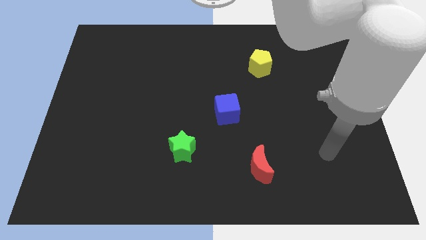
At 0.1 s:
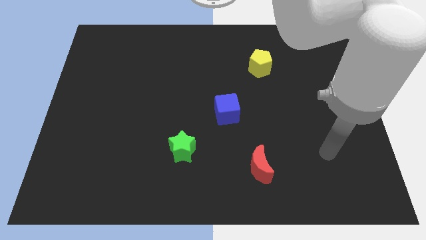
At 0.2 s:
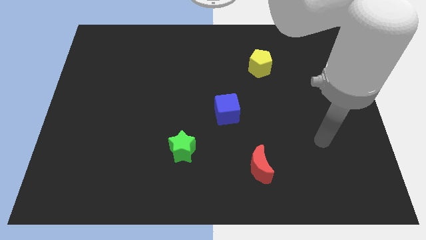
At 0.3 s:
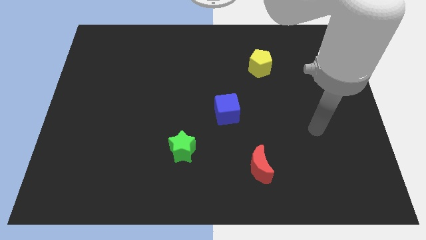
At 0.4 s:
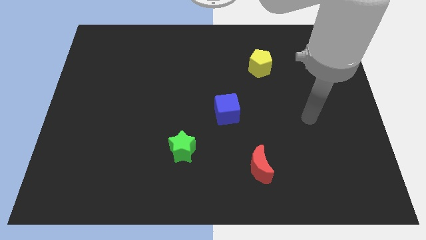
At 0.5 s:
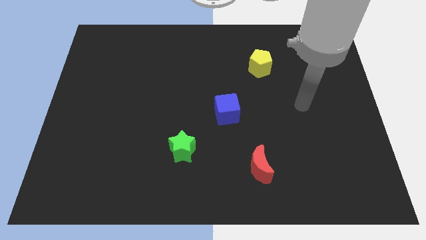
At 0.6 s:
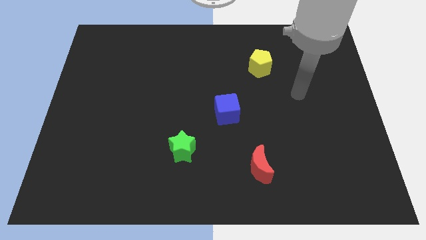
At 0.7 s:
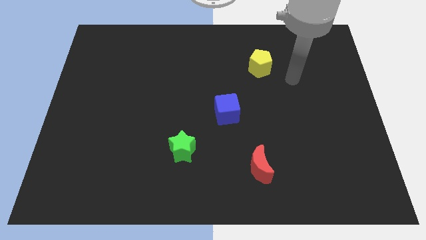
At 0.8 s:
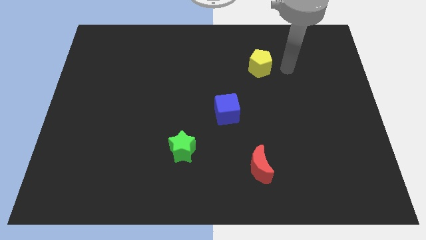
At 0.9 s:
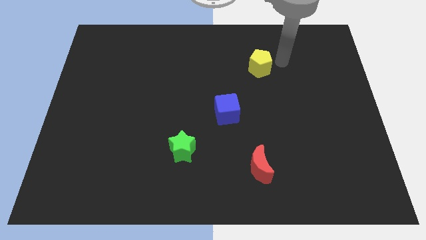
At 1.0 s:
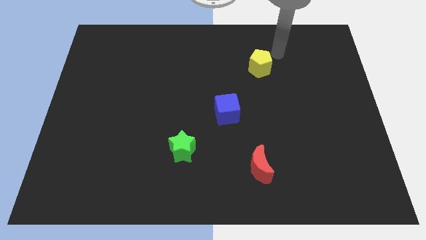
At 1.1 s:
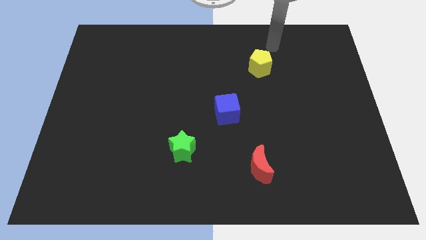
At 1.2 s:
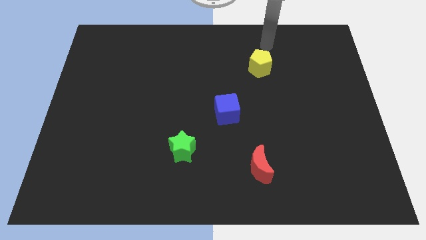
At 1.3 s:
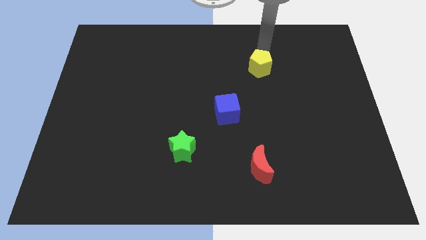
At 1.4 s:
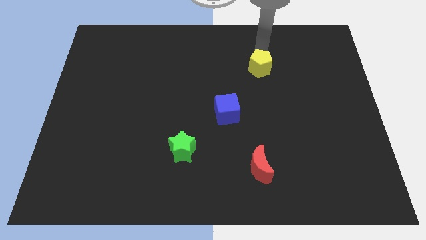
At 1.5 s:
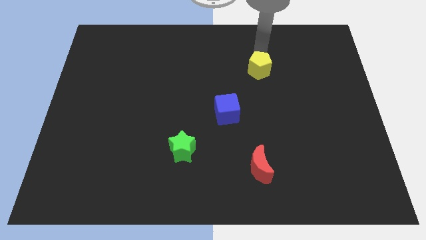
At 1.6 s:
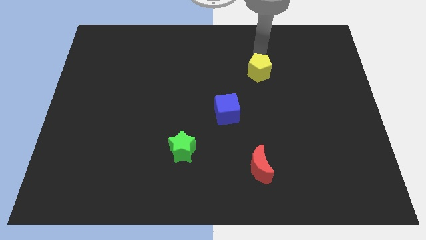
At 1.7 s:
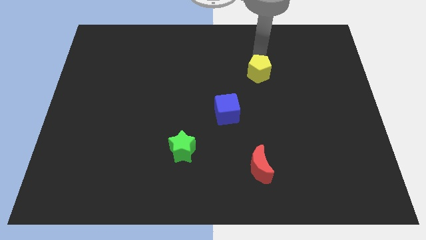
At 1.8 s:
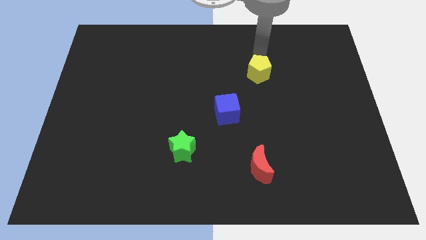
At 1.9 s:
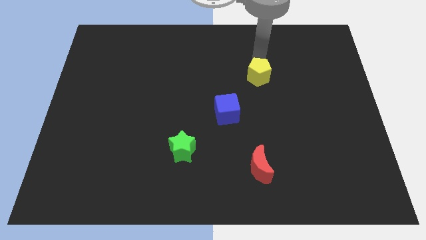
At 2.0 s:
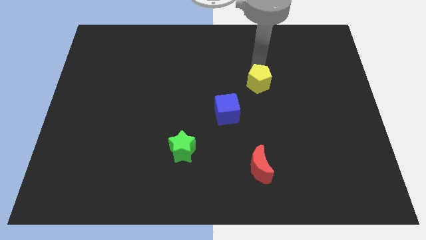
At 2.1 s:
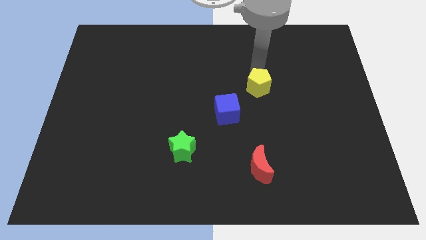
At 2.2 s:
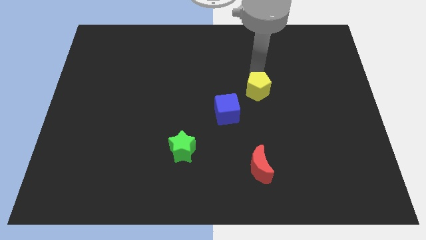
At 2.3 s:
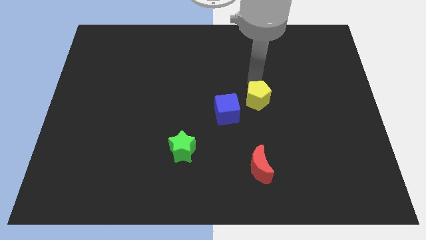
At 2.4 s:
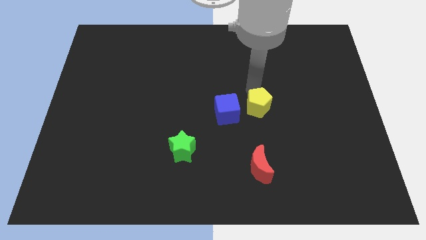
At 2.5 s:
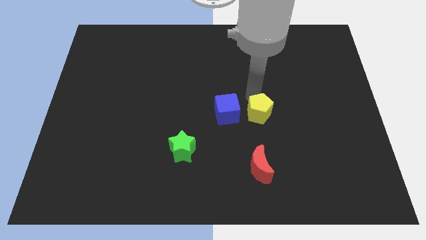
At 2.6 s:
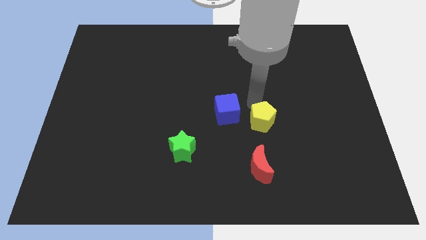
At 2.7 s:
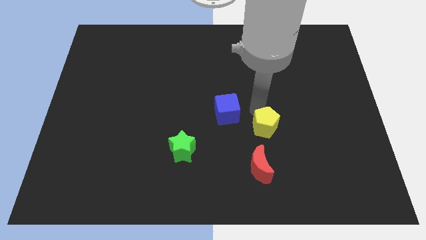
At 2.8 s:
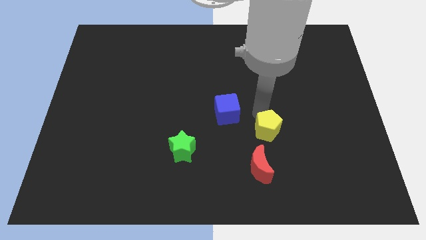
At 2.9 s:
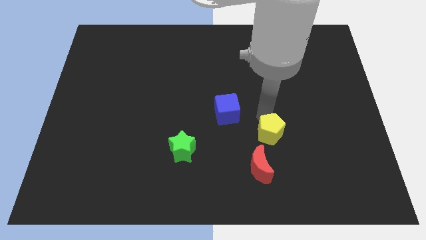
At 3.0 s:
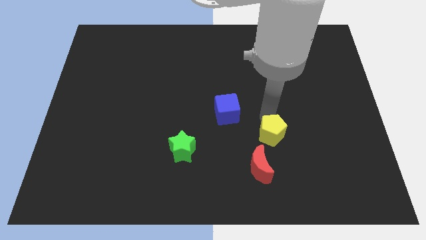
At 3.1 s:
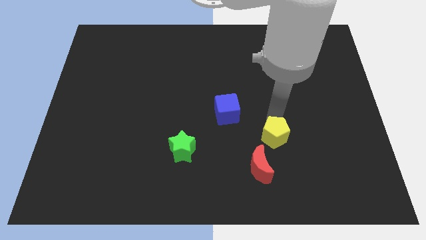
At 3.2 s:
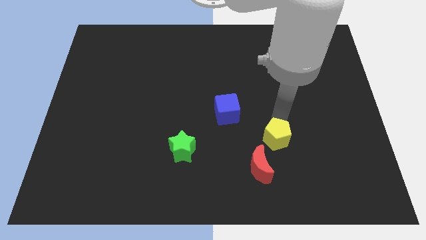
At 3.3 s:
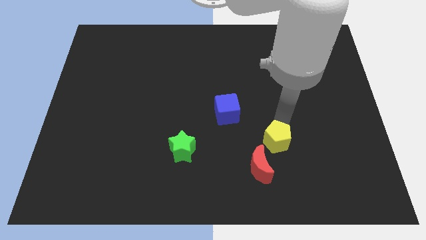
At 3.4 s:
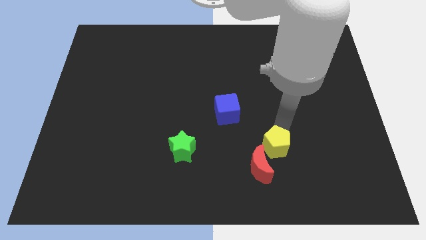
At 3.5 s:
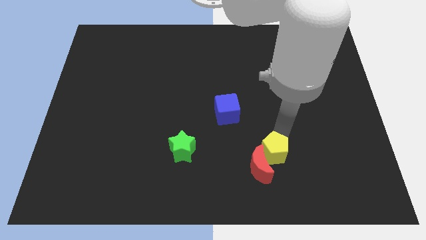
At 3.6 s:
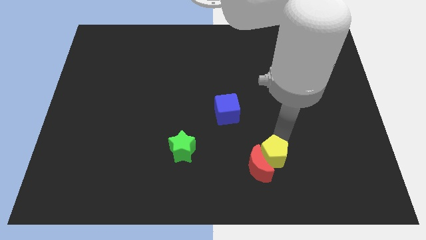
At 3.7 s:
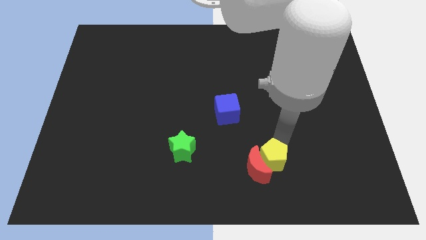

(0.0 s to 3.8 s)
slide the yellow block to the red block

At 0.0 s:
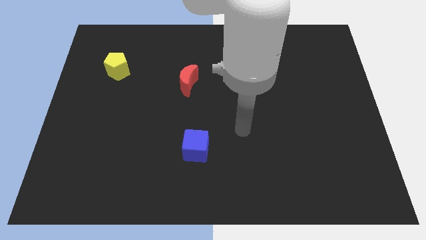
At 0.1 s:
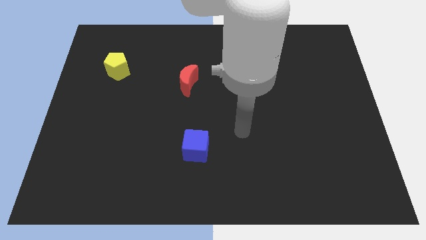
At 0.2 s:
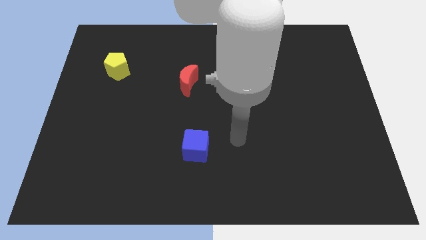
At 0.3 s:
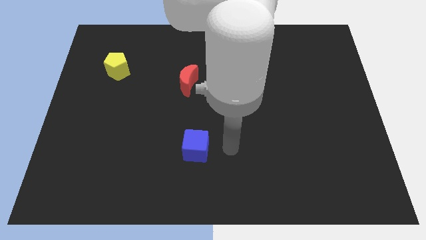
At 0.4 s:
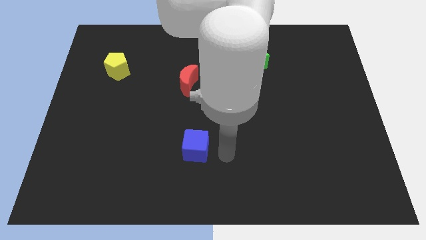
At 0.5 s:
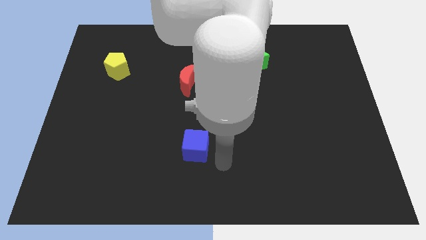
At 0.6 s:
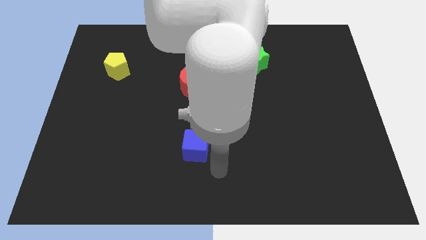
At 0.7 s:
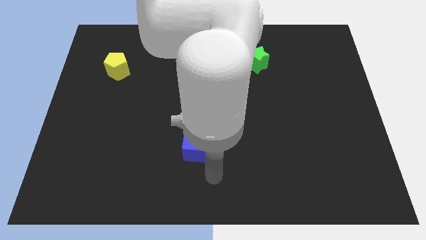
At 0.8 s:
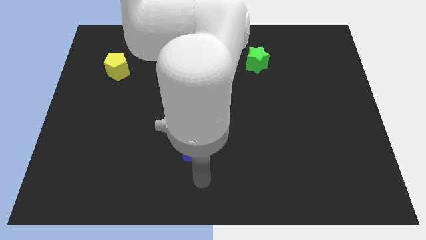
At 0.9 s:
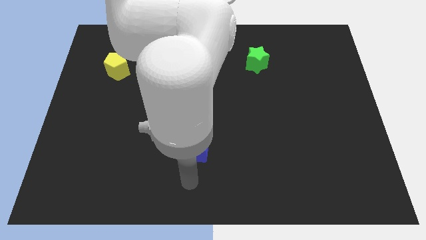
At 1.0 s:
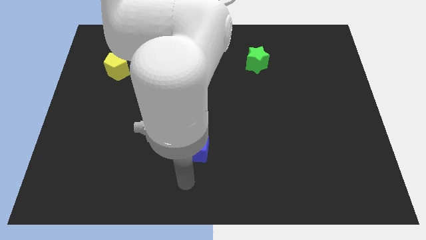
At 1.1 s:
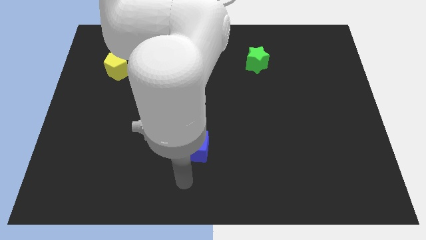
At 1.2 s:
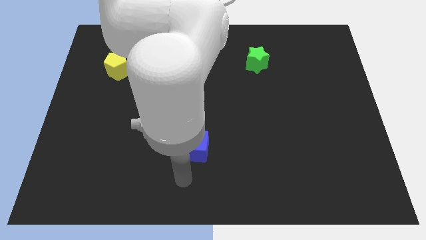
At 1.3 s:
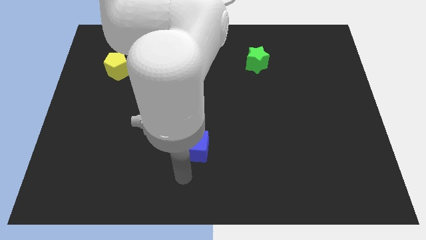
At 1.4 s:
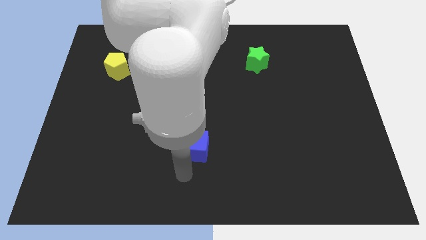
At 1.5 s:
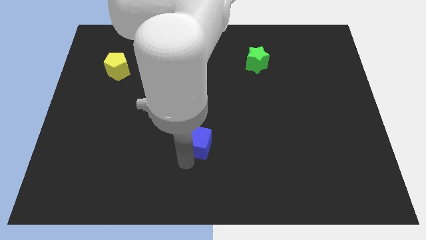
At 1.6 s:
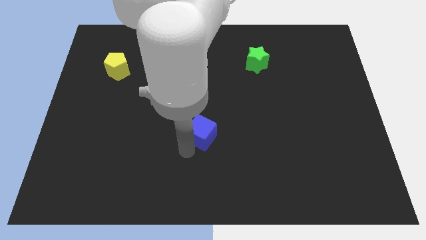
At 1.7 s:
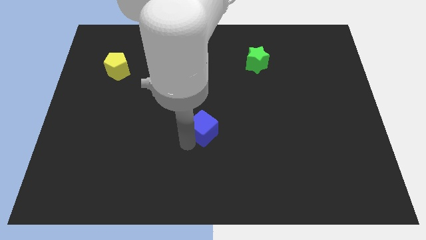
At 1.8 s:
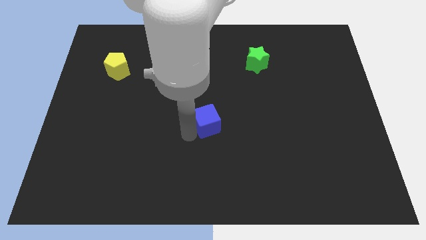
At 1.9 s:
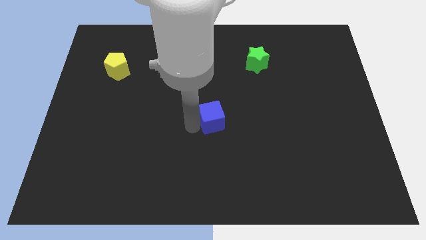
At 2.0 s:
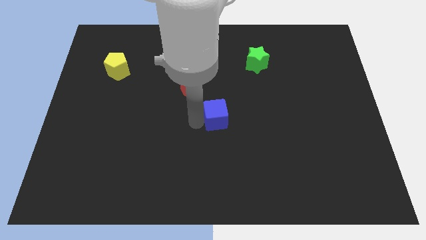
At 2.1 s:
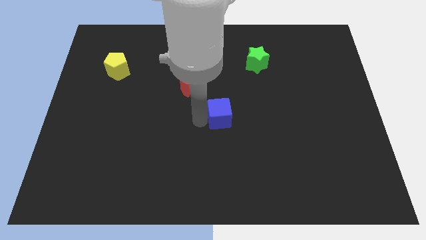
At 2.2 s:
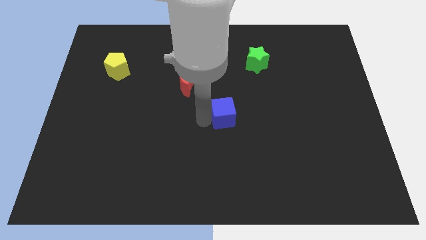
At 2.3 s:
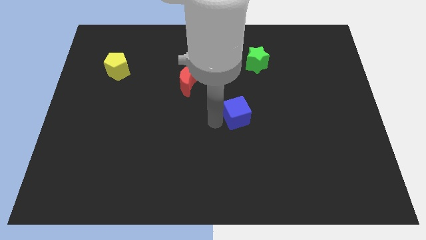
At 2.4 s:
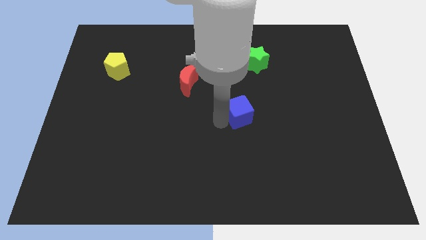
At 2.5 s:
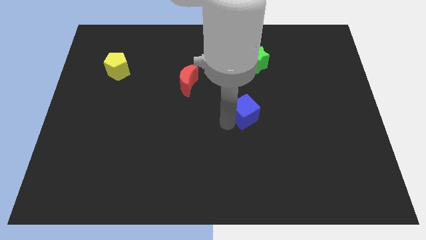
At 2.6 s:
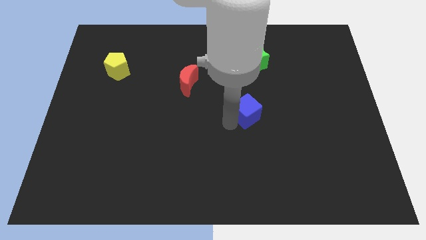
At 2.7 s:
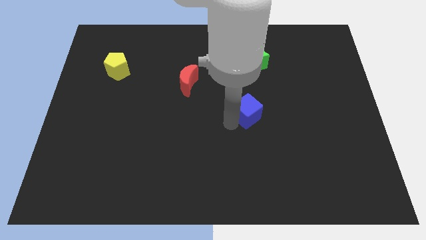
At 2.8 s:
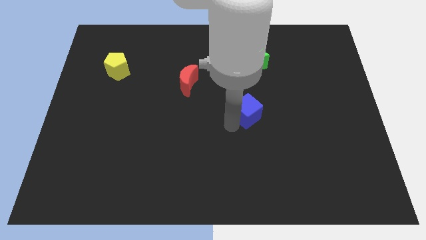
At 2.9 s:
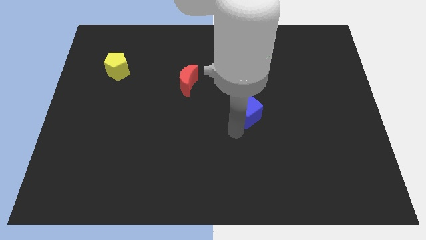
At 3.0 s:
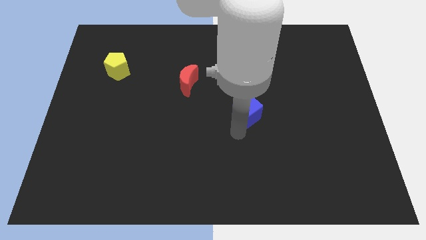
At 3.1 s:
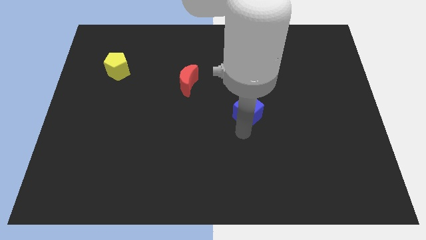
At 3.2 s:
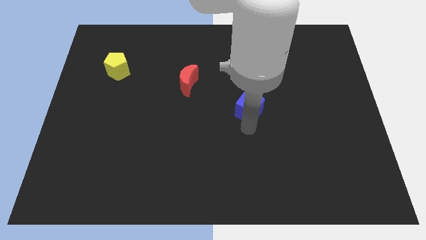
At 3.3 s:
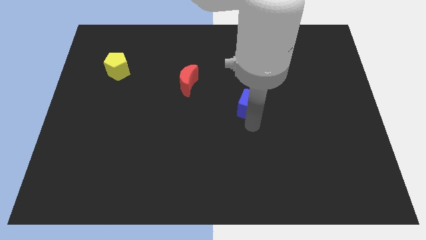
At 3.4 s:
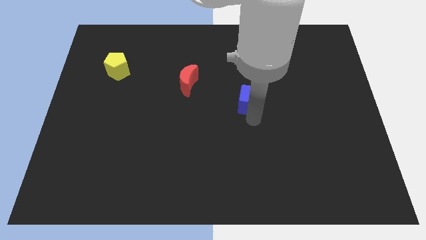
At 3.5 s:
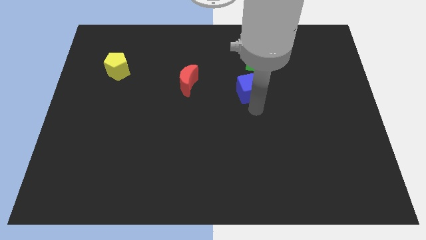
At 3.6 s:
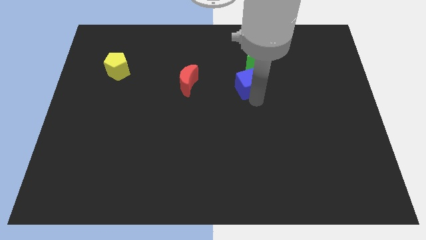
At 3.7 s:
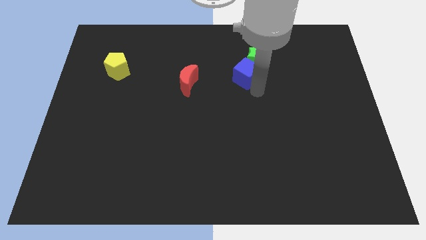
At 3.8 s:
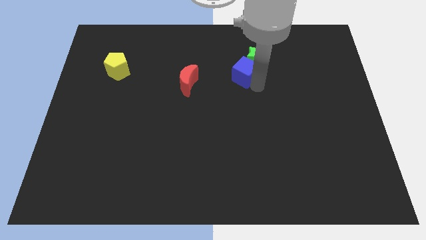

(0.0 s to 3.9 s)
push the blue block close to the star

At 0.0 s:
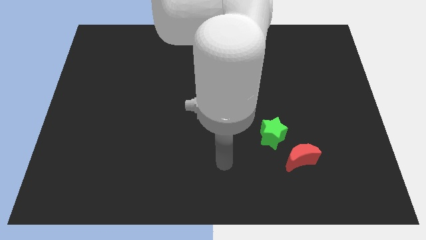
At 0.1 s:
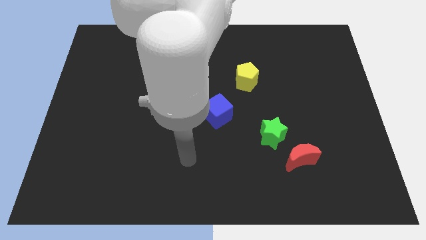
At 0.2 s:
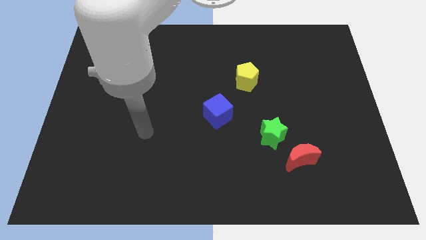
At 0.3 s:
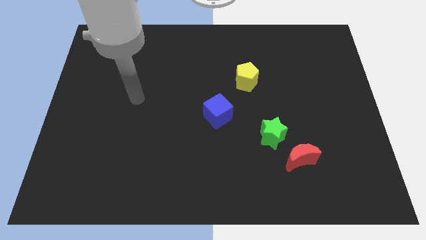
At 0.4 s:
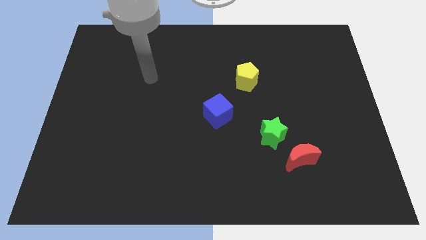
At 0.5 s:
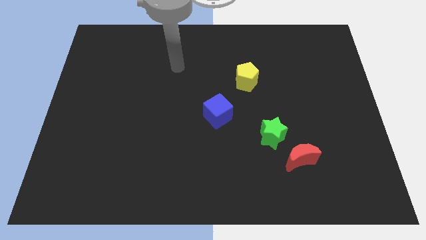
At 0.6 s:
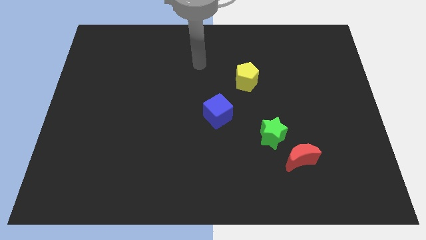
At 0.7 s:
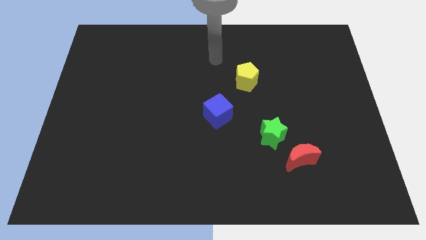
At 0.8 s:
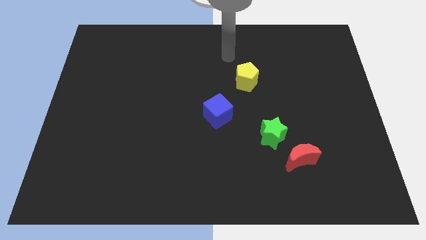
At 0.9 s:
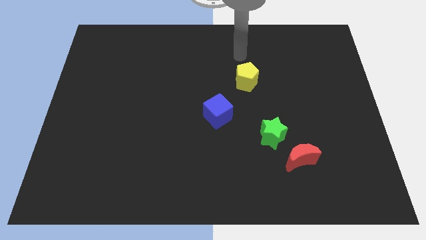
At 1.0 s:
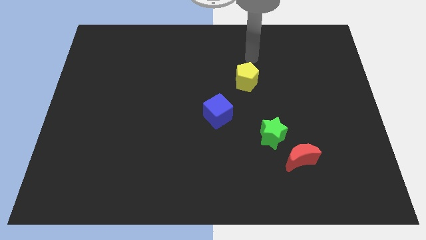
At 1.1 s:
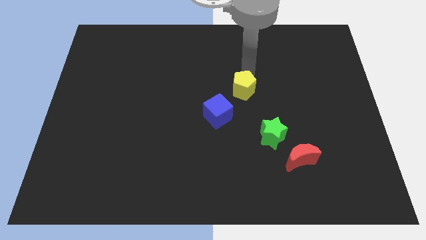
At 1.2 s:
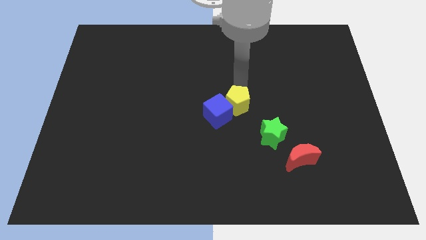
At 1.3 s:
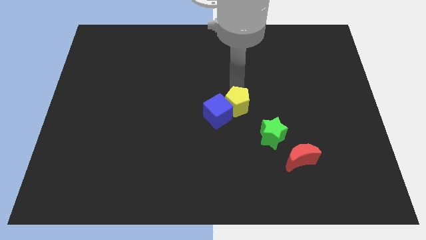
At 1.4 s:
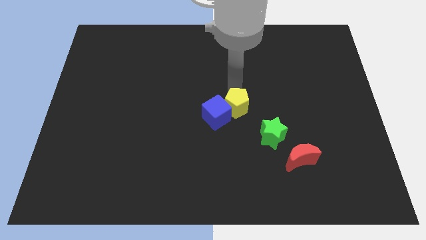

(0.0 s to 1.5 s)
move the yellow pentagon close to the blue cube
